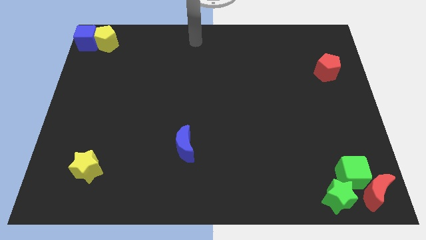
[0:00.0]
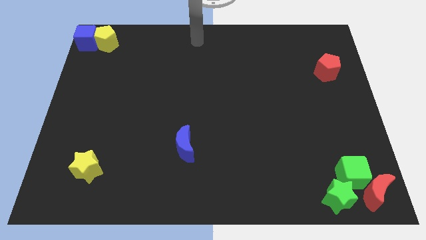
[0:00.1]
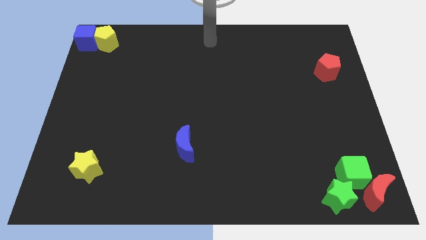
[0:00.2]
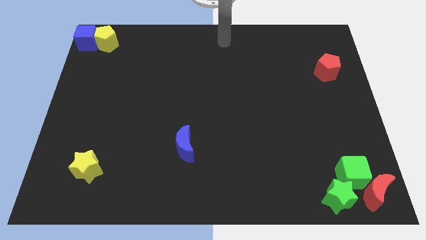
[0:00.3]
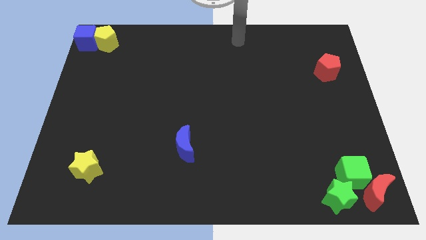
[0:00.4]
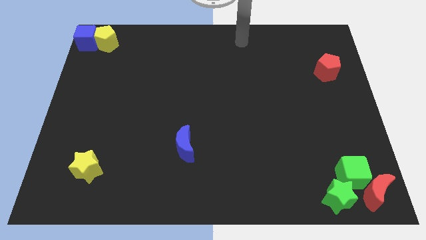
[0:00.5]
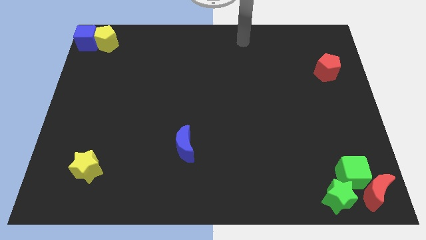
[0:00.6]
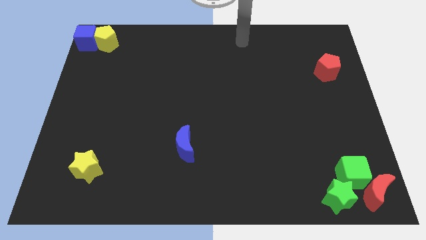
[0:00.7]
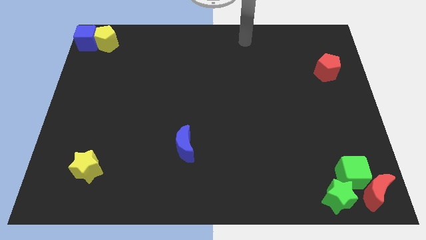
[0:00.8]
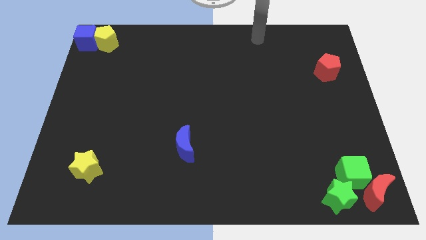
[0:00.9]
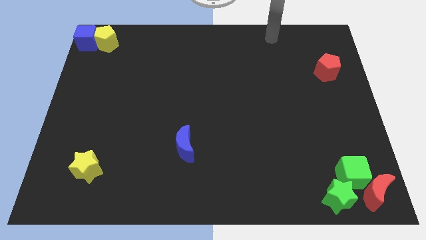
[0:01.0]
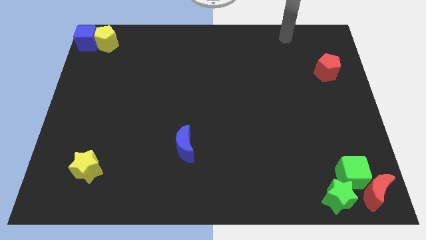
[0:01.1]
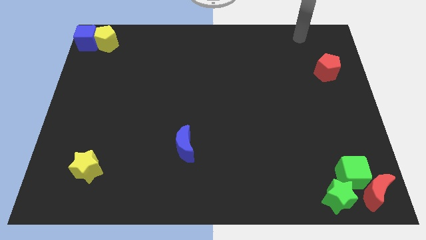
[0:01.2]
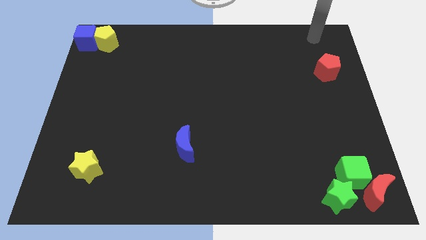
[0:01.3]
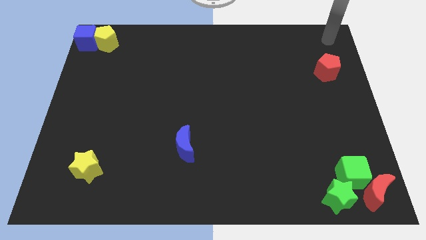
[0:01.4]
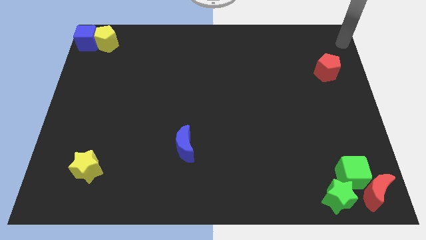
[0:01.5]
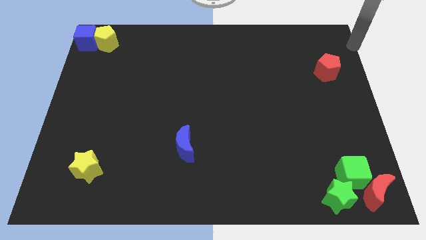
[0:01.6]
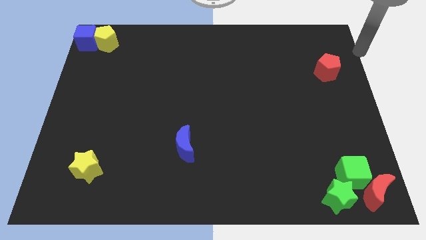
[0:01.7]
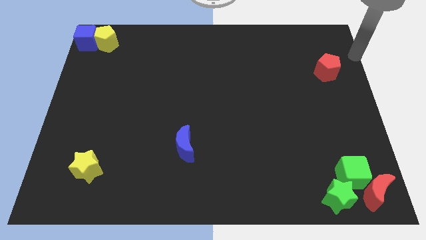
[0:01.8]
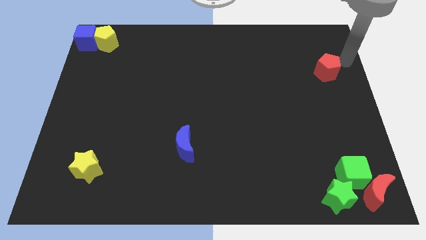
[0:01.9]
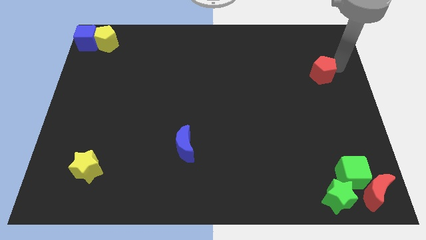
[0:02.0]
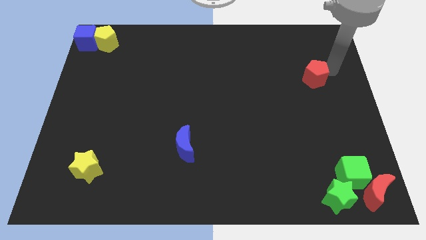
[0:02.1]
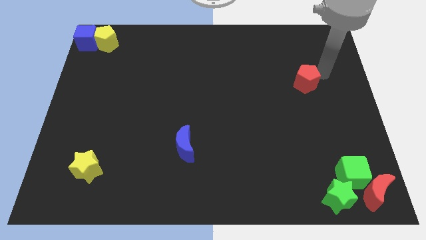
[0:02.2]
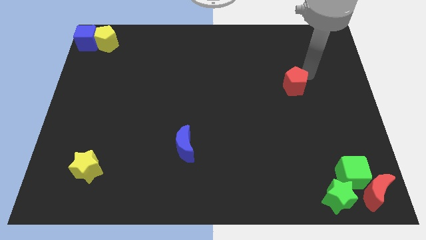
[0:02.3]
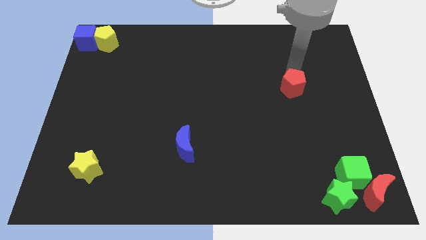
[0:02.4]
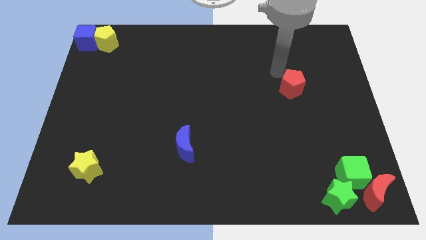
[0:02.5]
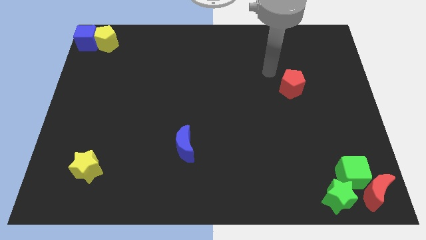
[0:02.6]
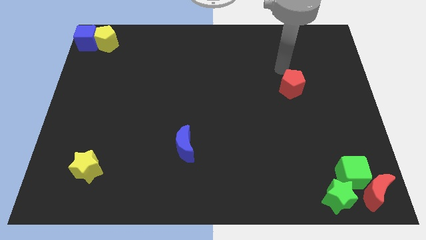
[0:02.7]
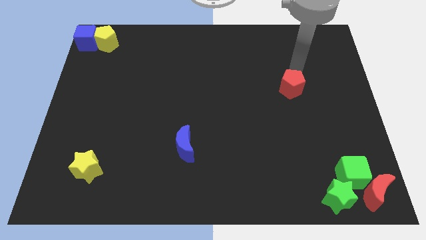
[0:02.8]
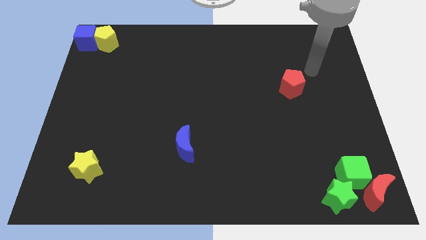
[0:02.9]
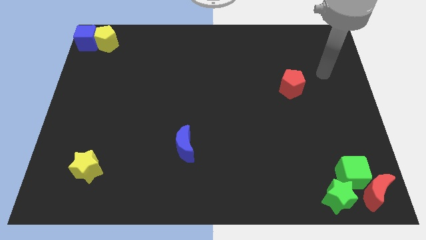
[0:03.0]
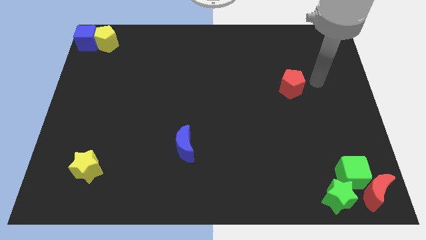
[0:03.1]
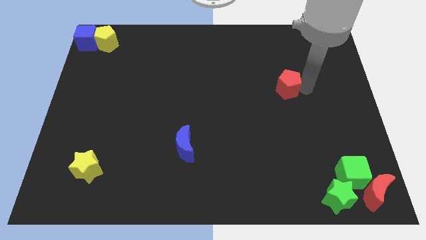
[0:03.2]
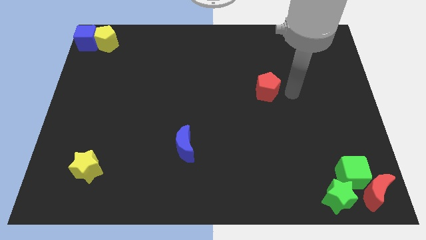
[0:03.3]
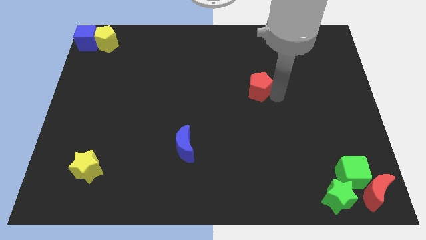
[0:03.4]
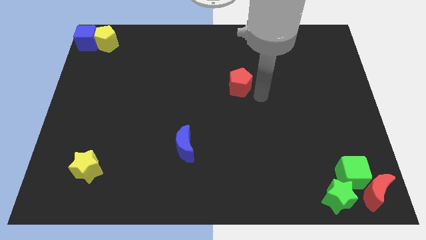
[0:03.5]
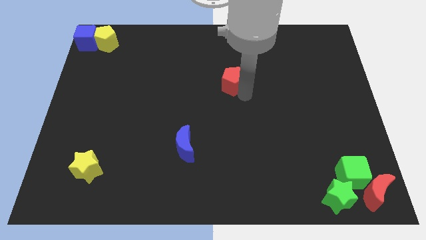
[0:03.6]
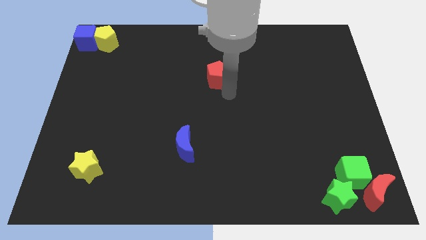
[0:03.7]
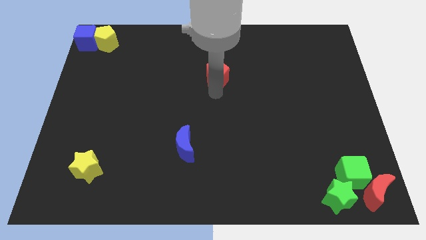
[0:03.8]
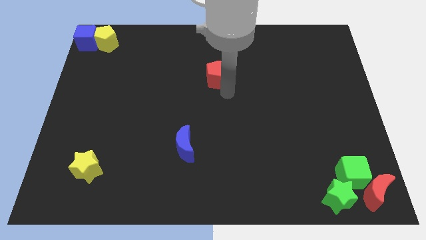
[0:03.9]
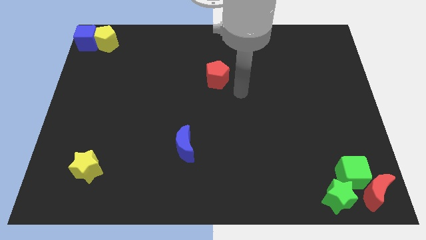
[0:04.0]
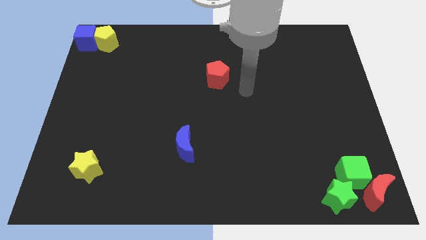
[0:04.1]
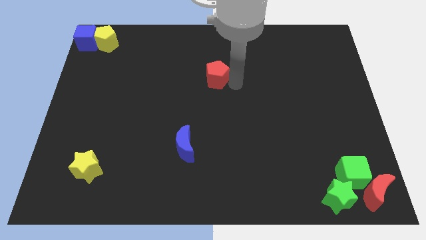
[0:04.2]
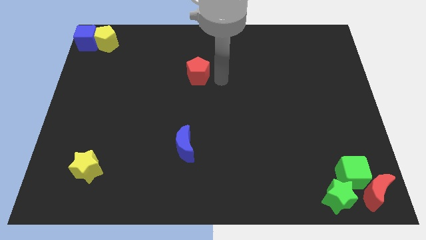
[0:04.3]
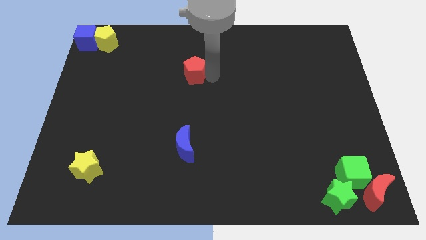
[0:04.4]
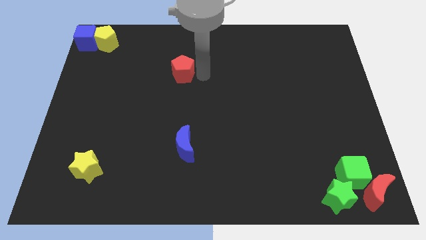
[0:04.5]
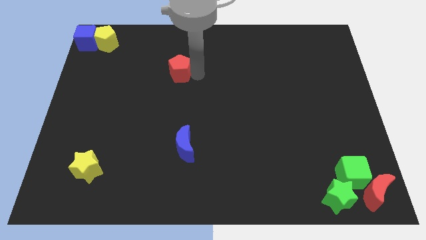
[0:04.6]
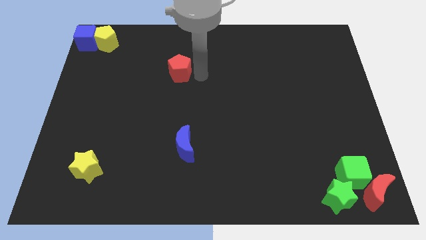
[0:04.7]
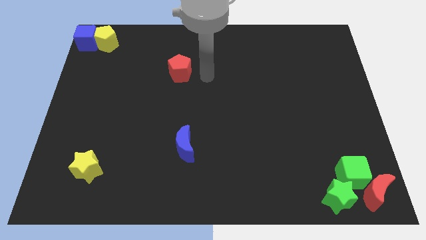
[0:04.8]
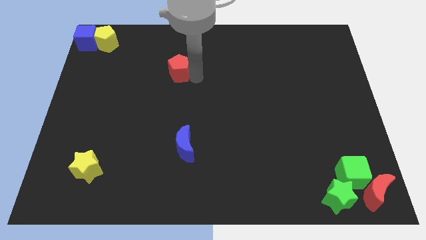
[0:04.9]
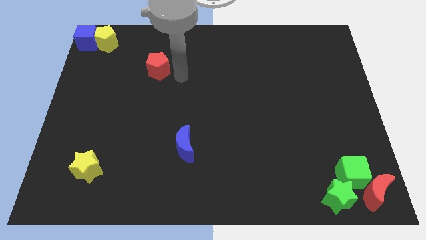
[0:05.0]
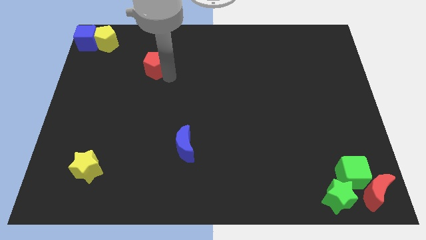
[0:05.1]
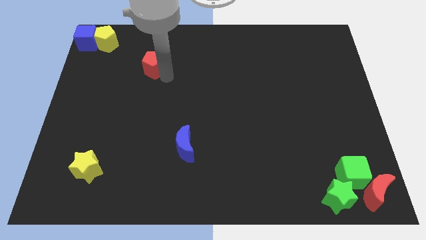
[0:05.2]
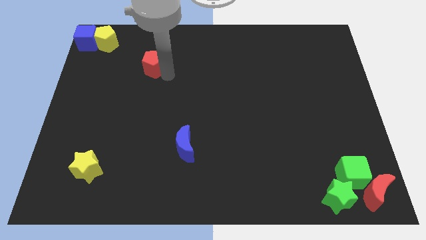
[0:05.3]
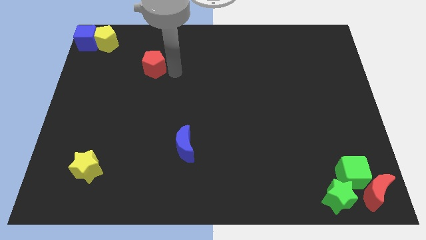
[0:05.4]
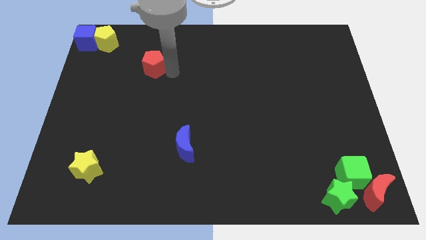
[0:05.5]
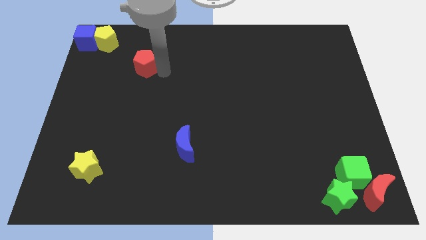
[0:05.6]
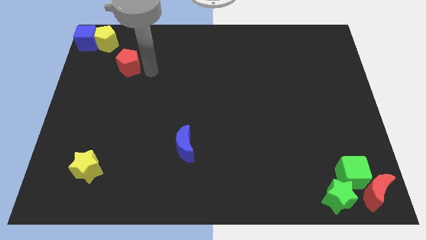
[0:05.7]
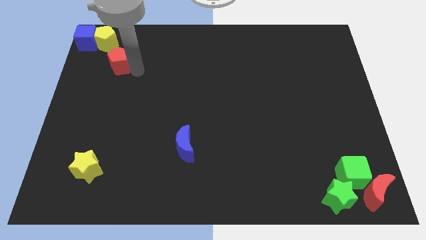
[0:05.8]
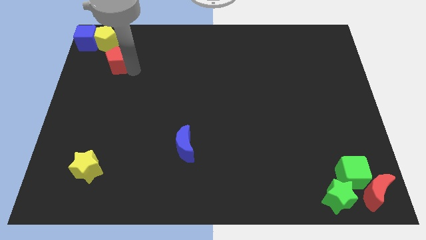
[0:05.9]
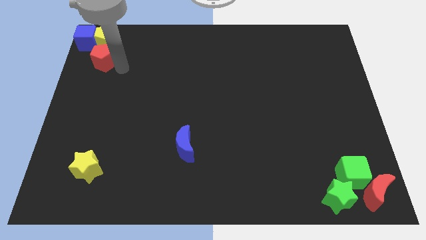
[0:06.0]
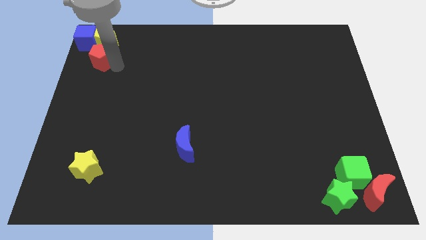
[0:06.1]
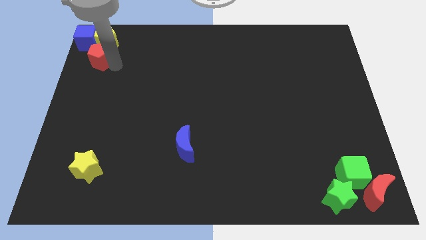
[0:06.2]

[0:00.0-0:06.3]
push the red pentagon to the bottom of the yellow pentagon

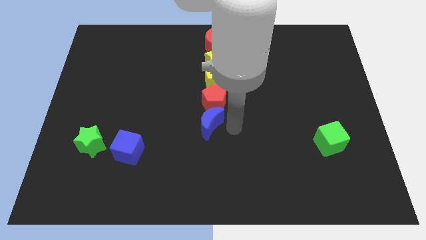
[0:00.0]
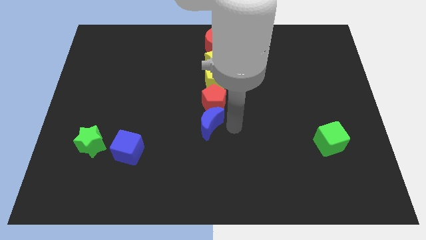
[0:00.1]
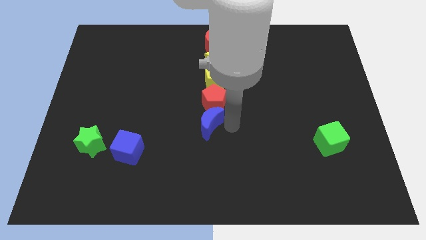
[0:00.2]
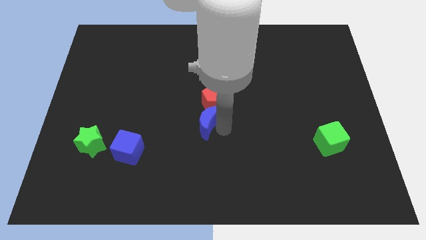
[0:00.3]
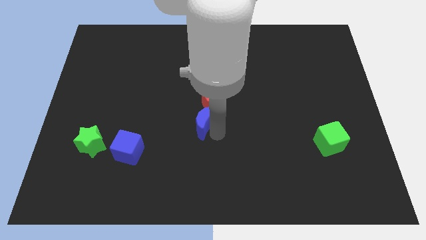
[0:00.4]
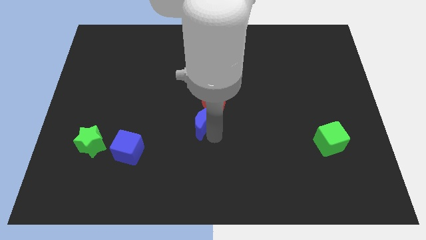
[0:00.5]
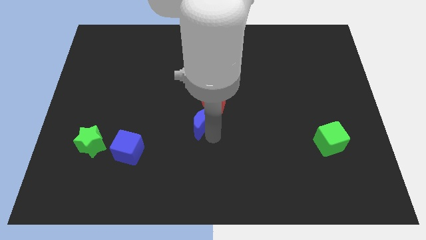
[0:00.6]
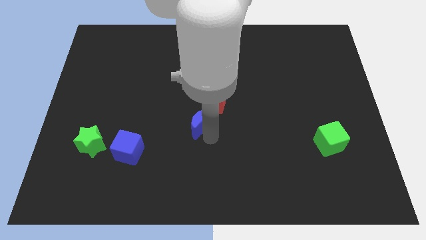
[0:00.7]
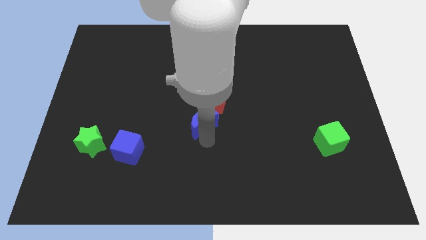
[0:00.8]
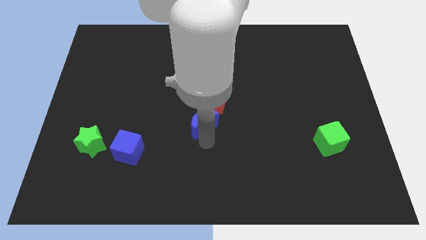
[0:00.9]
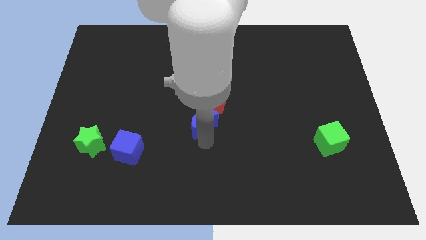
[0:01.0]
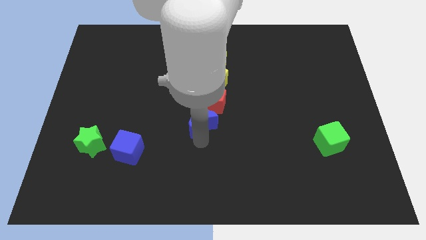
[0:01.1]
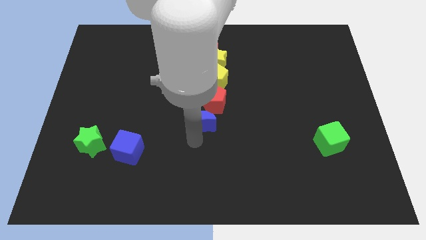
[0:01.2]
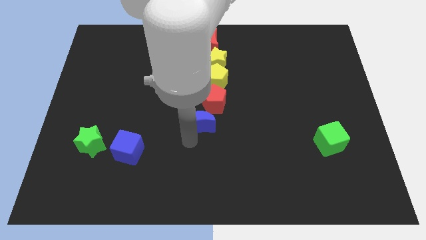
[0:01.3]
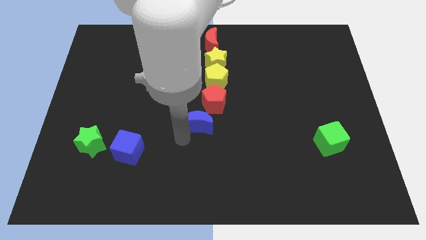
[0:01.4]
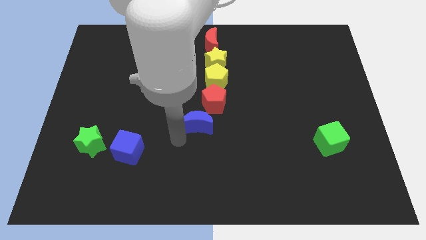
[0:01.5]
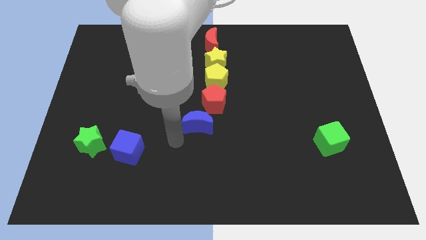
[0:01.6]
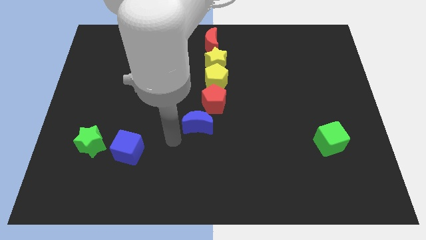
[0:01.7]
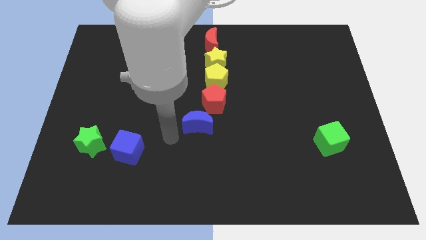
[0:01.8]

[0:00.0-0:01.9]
push the blue moon slightly to the left side of the board

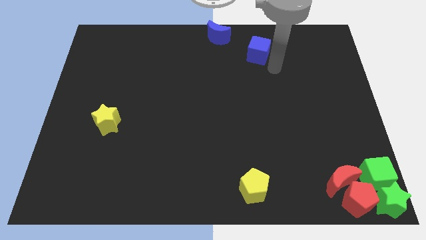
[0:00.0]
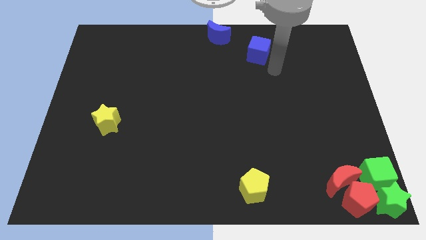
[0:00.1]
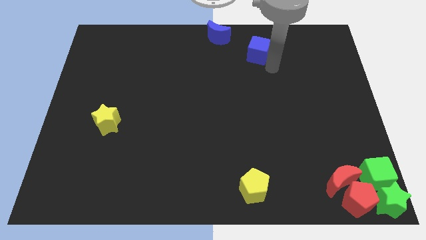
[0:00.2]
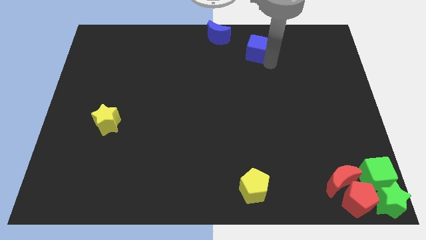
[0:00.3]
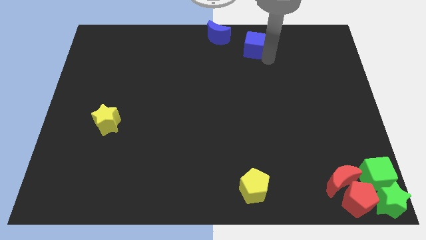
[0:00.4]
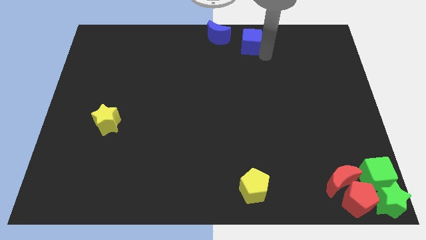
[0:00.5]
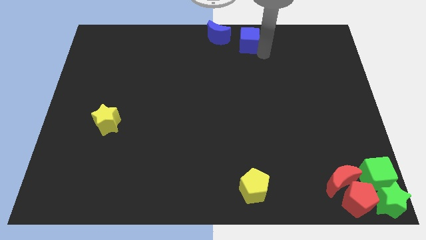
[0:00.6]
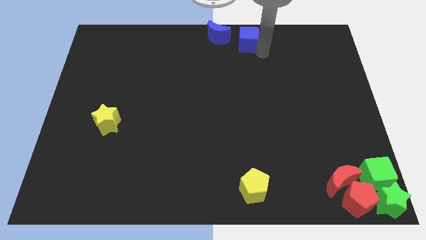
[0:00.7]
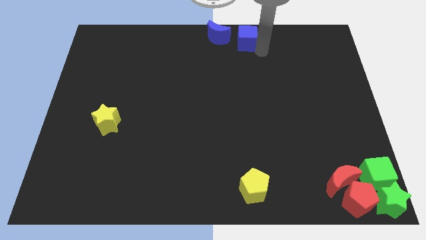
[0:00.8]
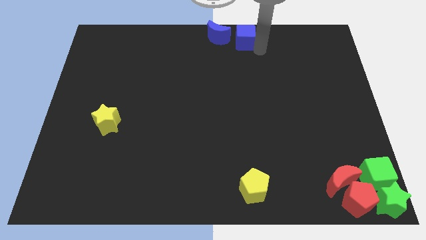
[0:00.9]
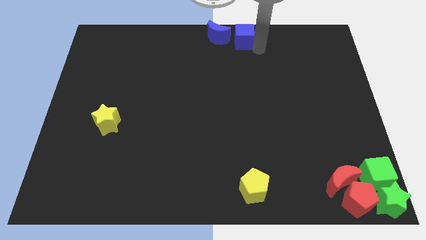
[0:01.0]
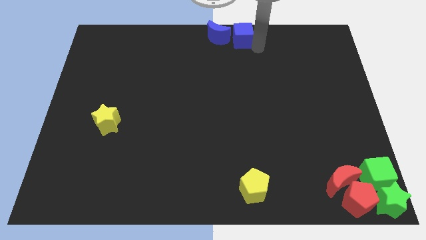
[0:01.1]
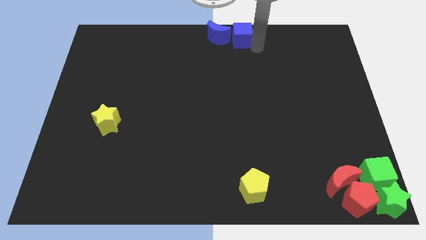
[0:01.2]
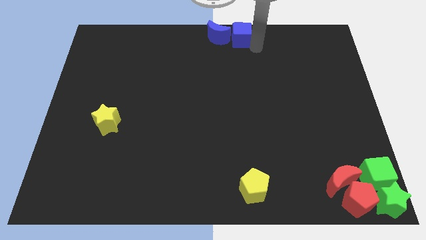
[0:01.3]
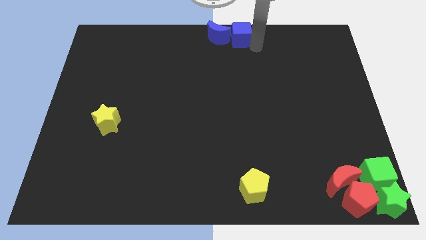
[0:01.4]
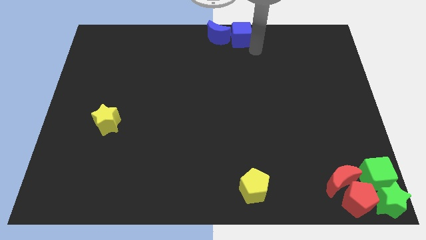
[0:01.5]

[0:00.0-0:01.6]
place the blue cube right to the blue crescent
